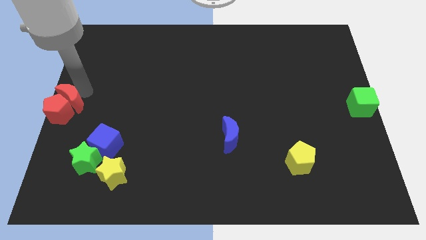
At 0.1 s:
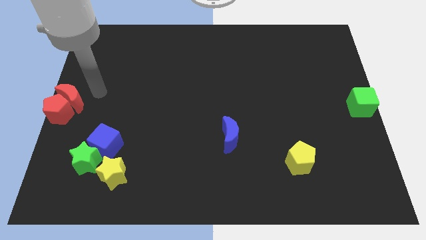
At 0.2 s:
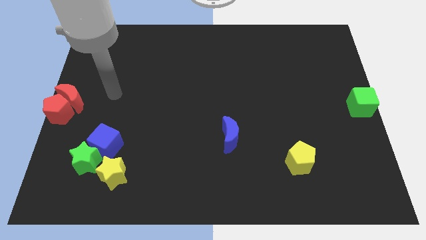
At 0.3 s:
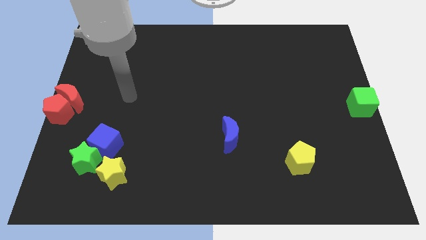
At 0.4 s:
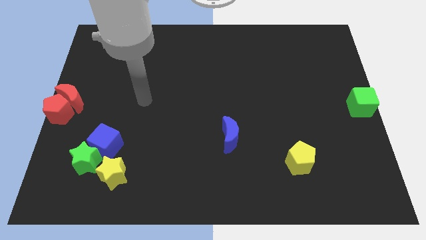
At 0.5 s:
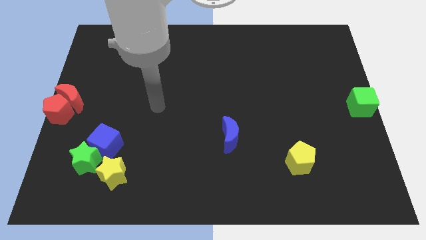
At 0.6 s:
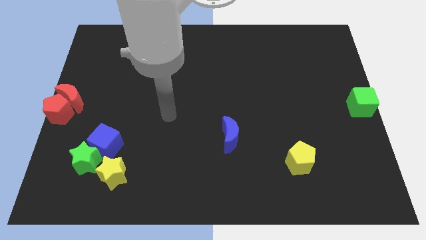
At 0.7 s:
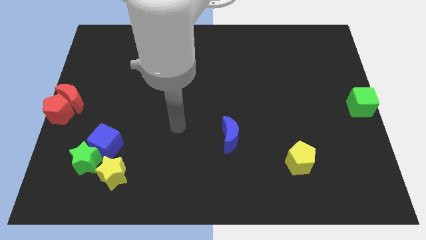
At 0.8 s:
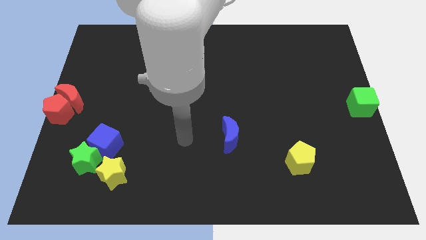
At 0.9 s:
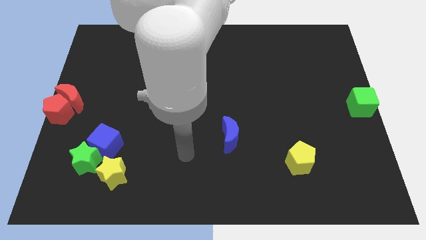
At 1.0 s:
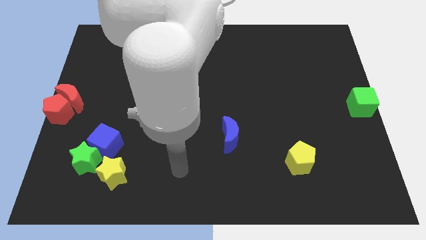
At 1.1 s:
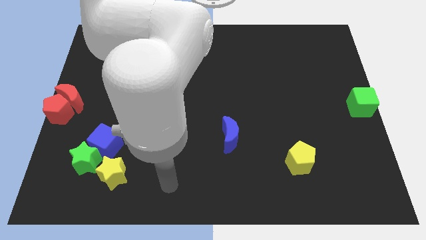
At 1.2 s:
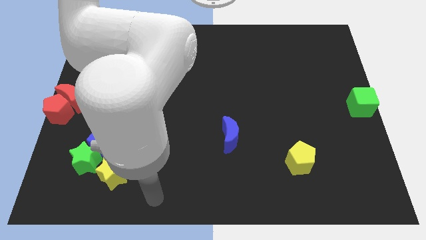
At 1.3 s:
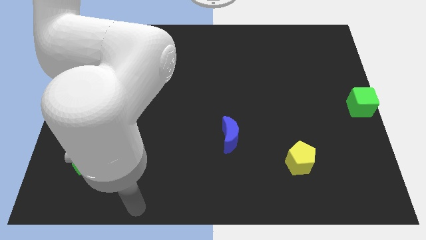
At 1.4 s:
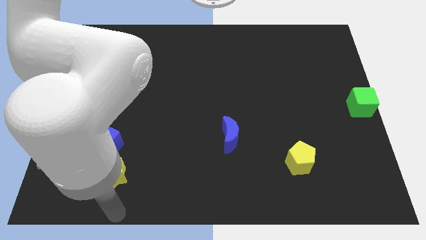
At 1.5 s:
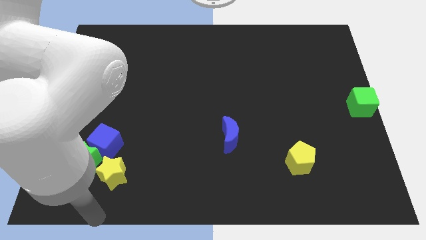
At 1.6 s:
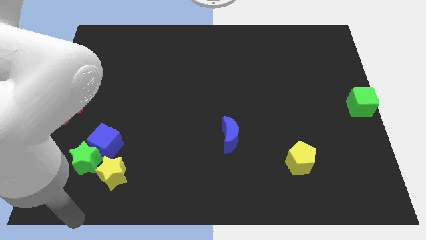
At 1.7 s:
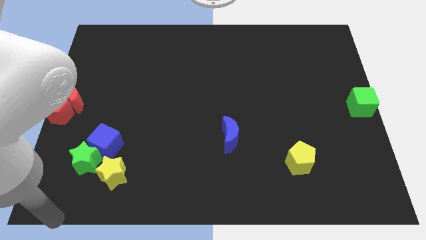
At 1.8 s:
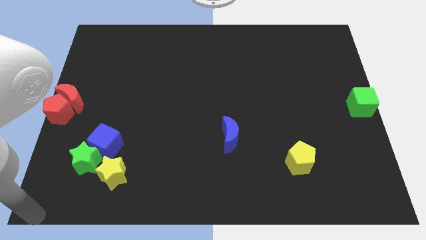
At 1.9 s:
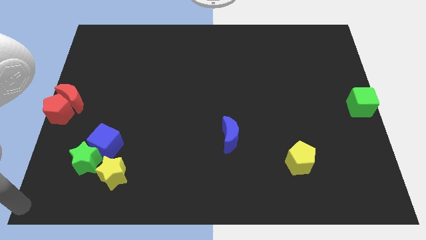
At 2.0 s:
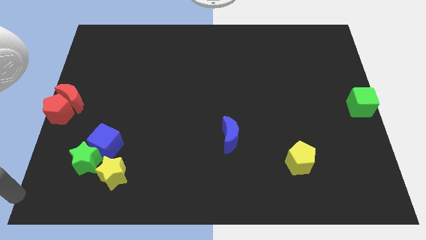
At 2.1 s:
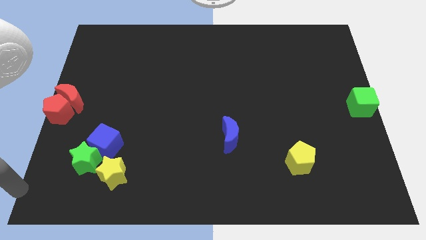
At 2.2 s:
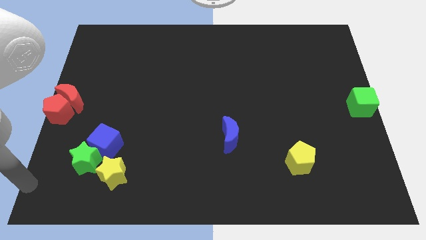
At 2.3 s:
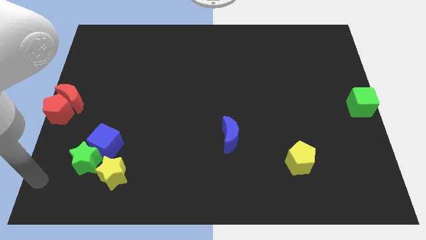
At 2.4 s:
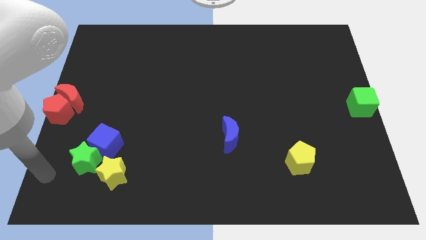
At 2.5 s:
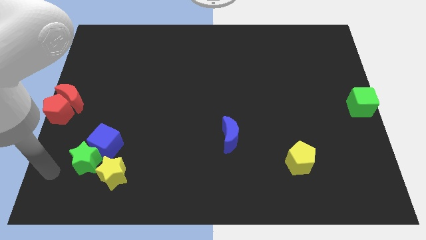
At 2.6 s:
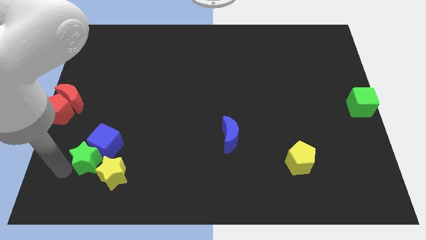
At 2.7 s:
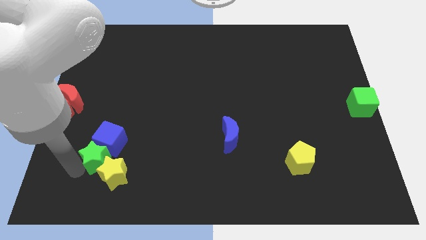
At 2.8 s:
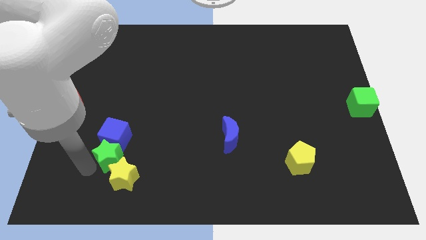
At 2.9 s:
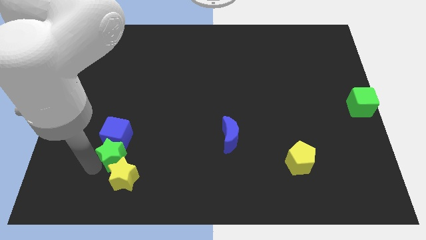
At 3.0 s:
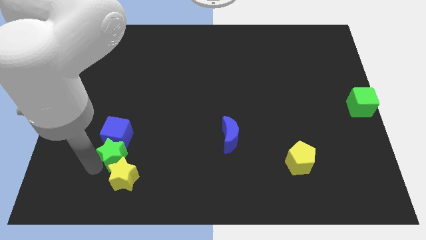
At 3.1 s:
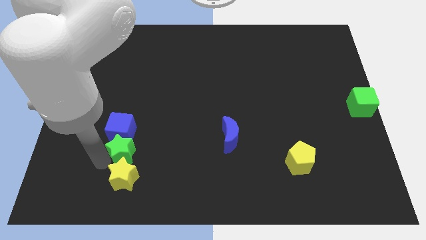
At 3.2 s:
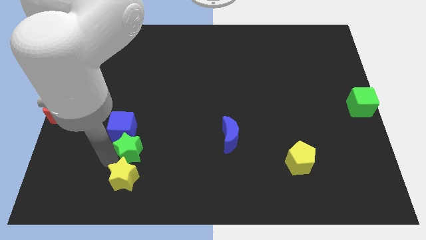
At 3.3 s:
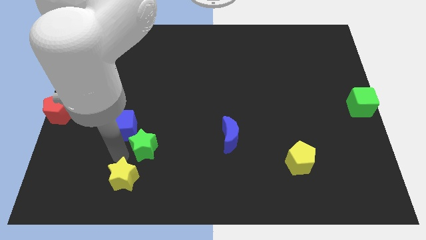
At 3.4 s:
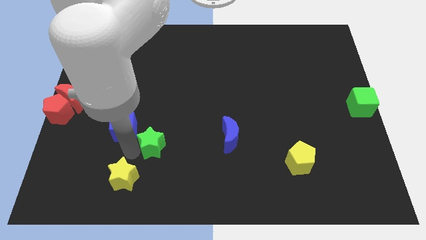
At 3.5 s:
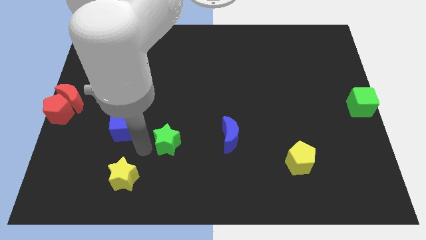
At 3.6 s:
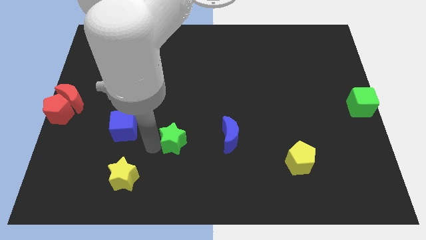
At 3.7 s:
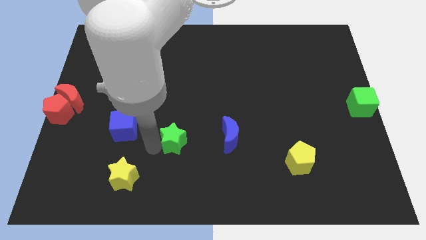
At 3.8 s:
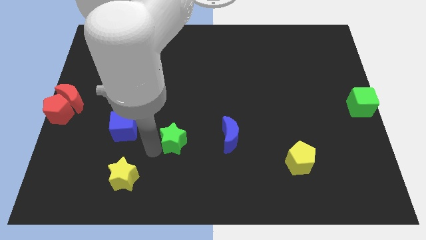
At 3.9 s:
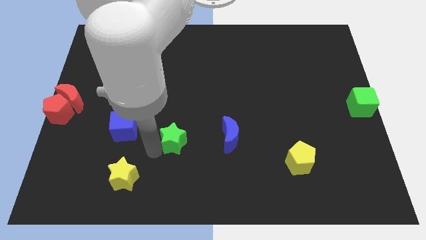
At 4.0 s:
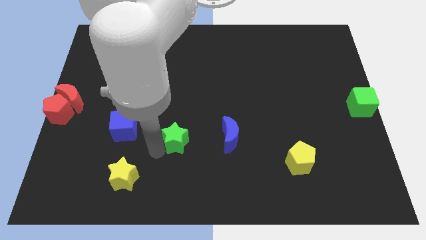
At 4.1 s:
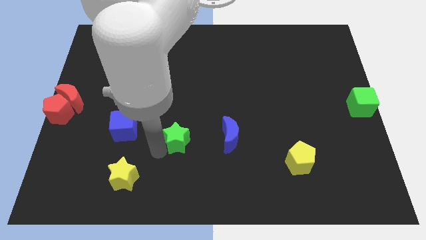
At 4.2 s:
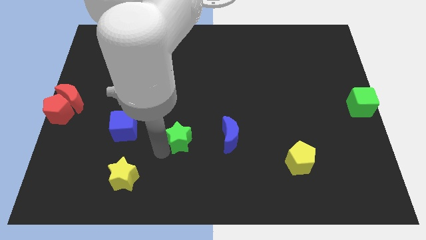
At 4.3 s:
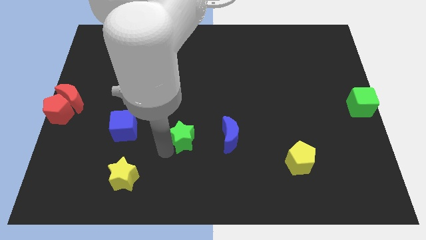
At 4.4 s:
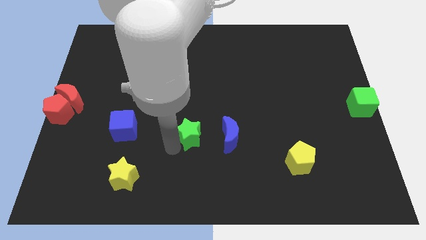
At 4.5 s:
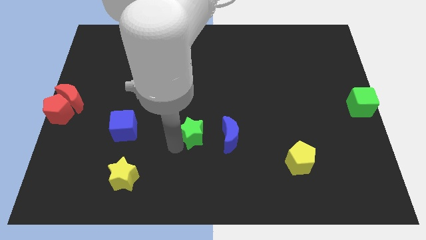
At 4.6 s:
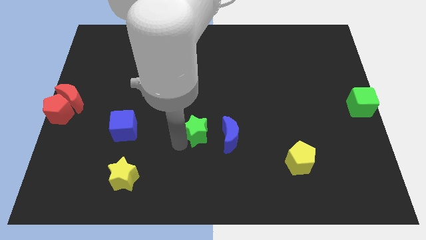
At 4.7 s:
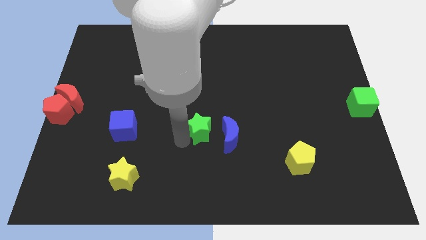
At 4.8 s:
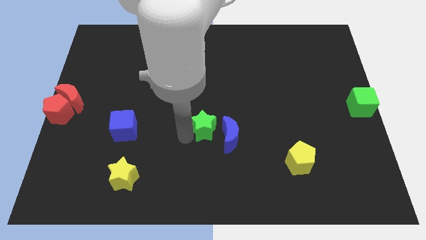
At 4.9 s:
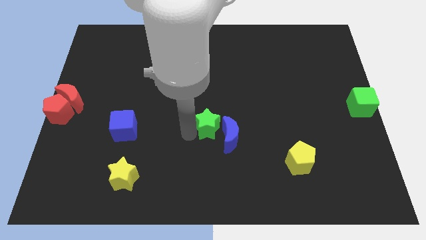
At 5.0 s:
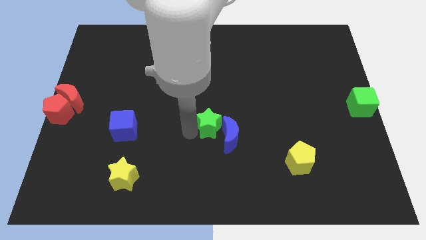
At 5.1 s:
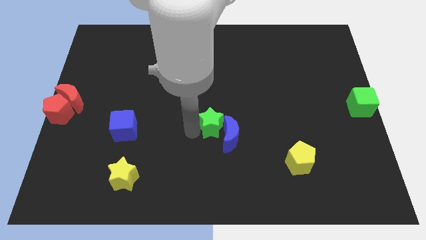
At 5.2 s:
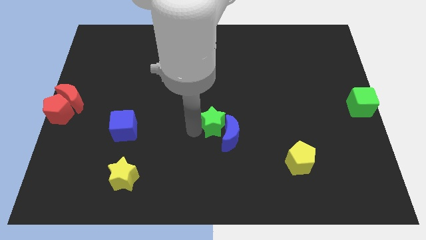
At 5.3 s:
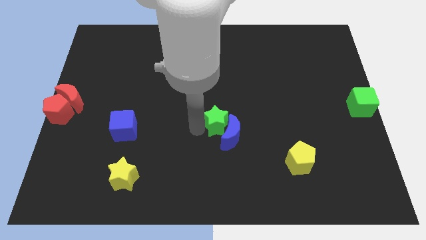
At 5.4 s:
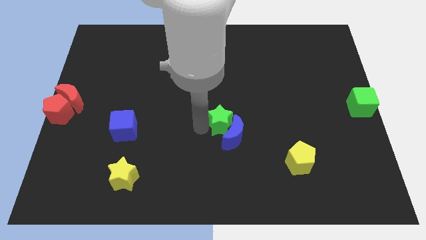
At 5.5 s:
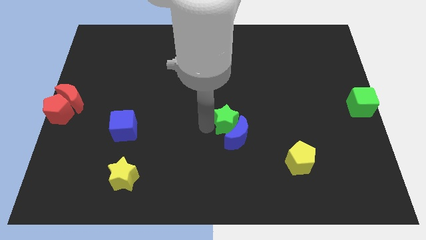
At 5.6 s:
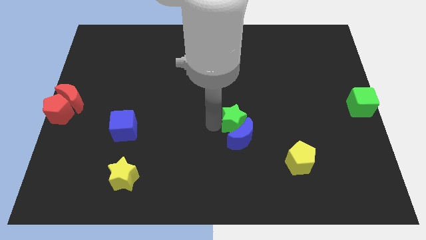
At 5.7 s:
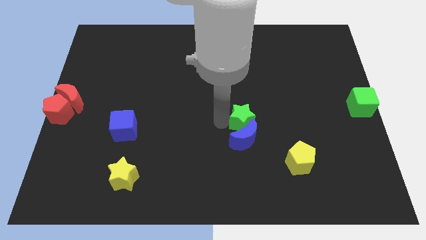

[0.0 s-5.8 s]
push the green star into the blue semicircle

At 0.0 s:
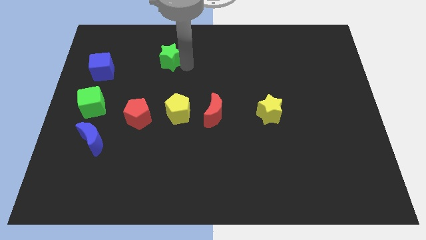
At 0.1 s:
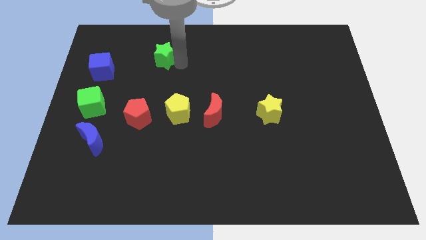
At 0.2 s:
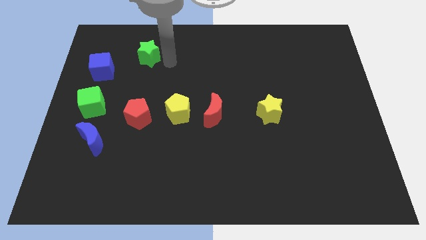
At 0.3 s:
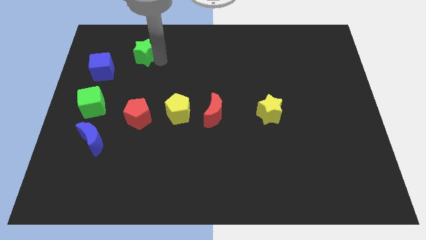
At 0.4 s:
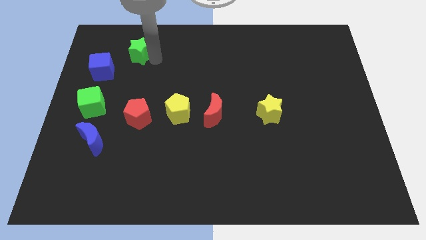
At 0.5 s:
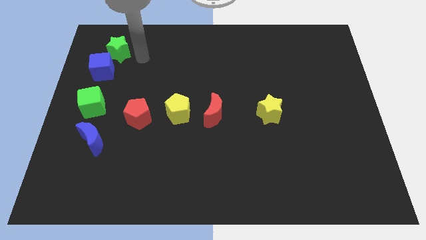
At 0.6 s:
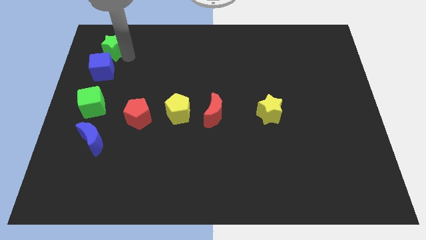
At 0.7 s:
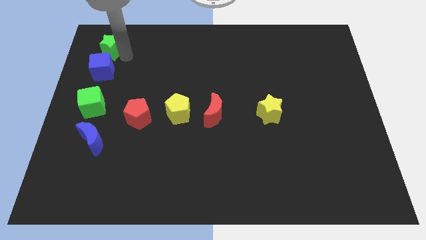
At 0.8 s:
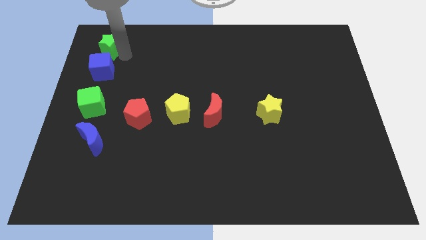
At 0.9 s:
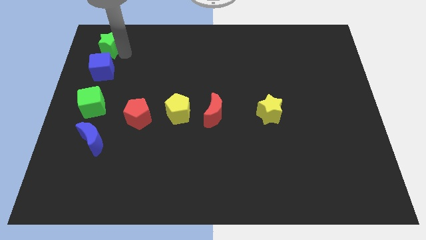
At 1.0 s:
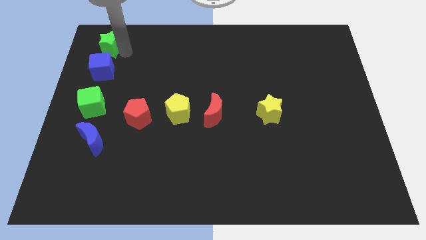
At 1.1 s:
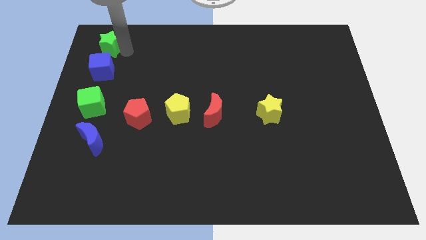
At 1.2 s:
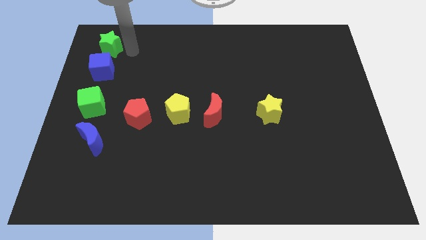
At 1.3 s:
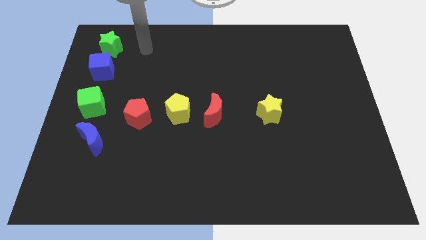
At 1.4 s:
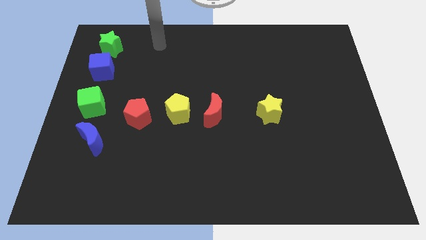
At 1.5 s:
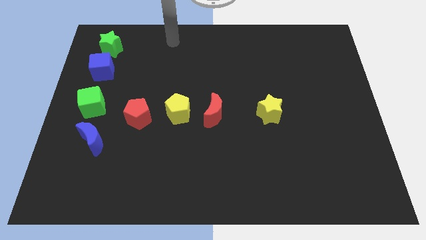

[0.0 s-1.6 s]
place the green star above the blue cube

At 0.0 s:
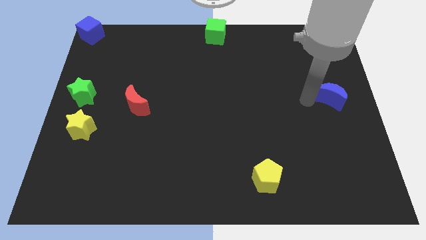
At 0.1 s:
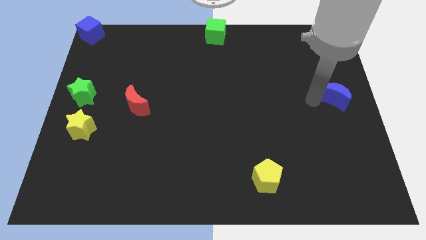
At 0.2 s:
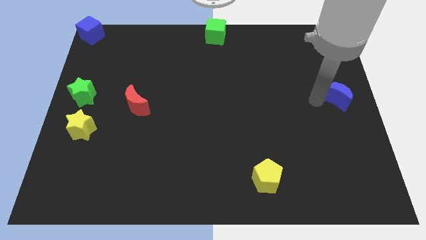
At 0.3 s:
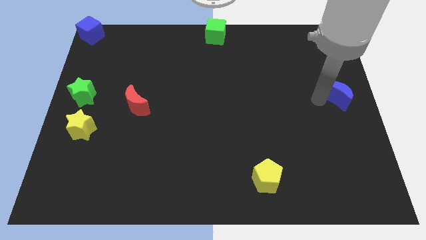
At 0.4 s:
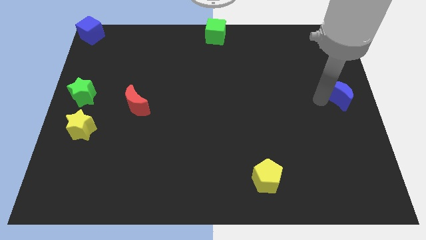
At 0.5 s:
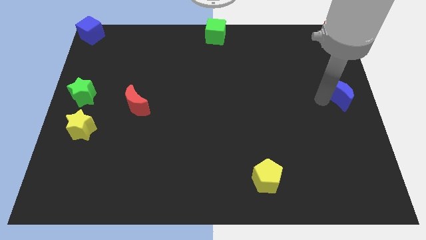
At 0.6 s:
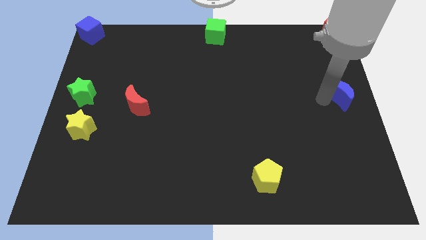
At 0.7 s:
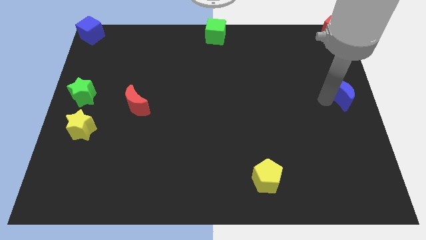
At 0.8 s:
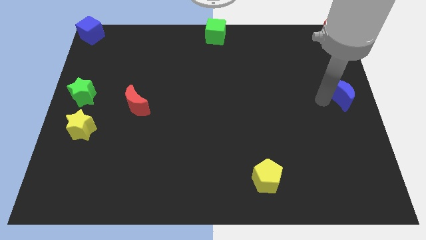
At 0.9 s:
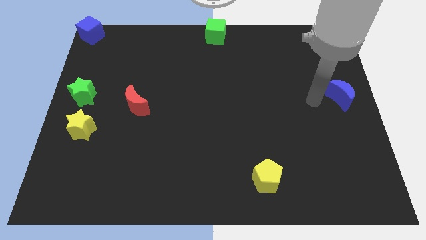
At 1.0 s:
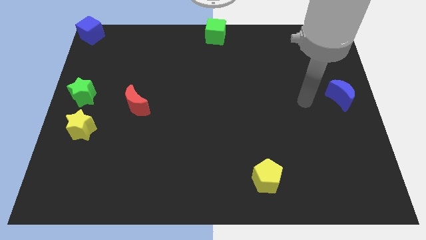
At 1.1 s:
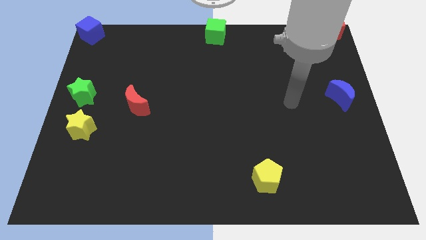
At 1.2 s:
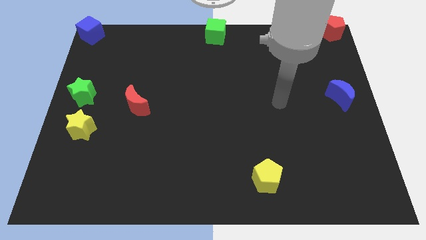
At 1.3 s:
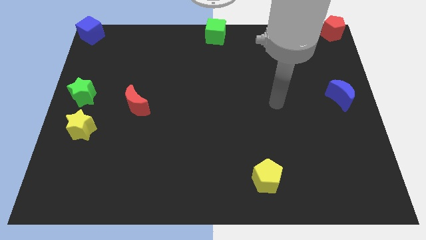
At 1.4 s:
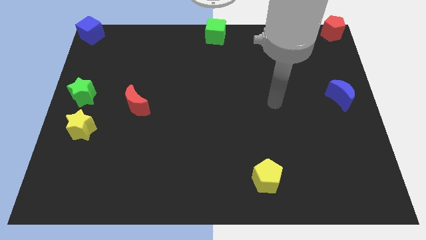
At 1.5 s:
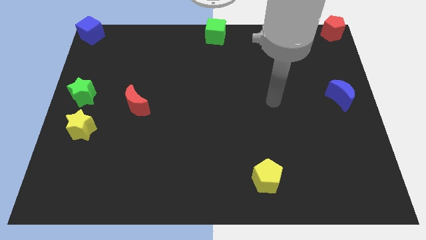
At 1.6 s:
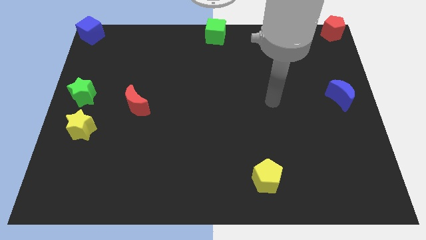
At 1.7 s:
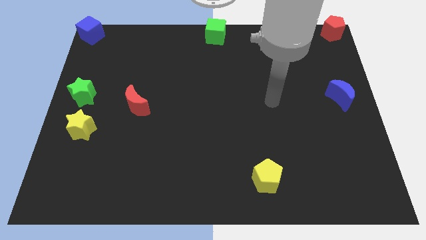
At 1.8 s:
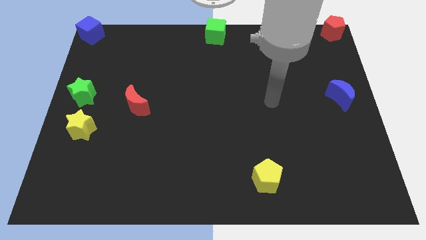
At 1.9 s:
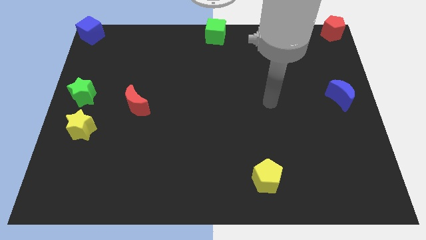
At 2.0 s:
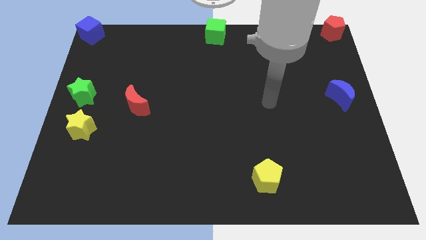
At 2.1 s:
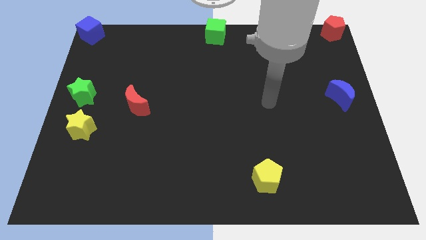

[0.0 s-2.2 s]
push the blue crescent to the right center of the board
